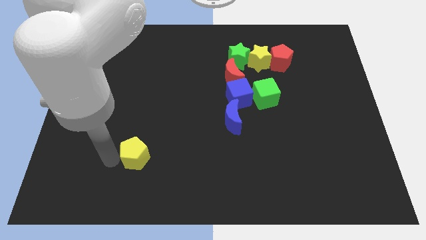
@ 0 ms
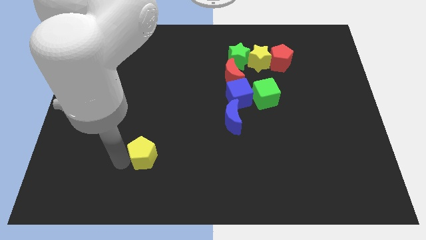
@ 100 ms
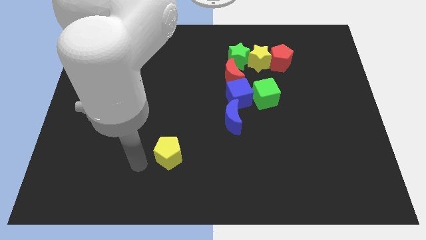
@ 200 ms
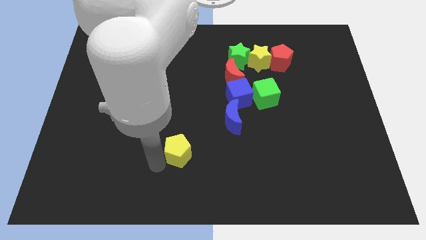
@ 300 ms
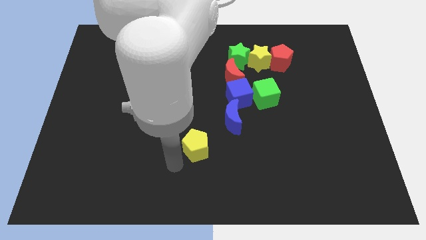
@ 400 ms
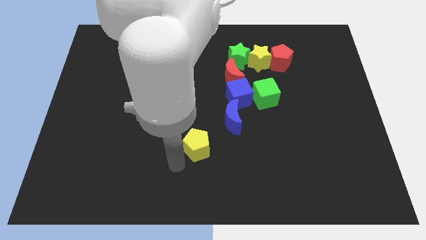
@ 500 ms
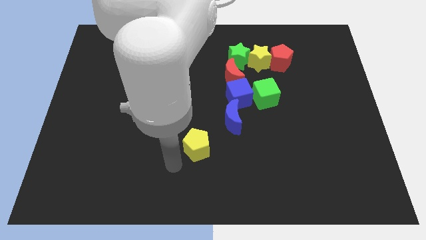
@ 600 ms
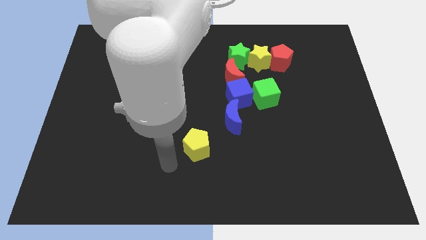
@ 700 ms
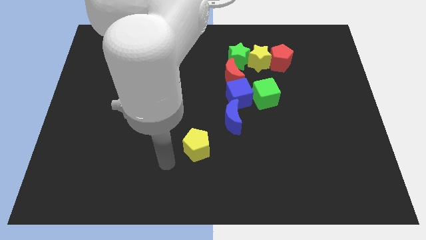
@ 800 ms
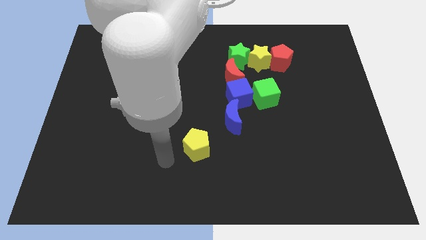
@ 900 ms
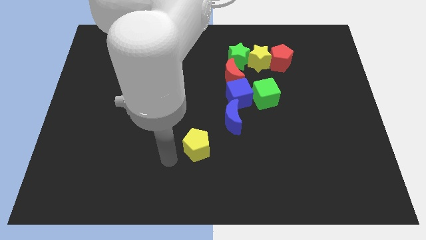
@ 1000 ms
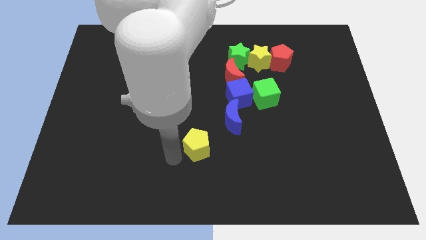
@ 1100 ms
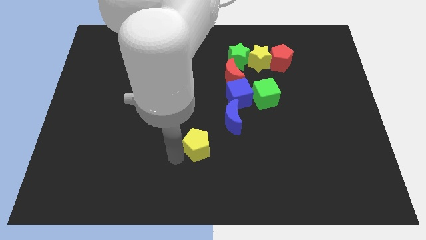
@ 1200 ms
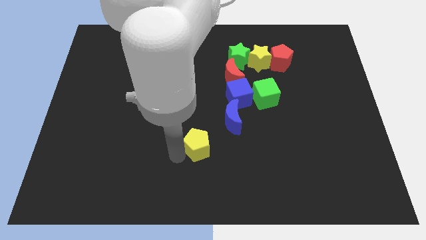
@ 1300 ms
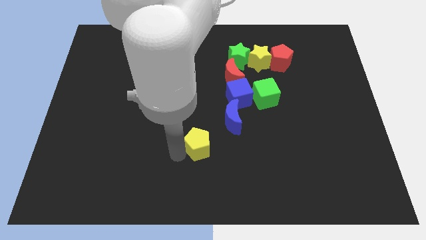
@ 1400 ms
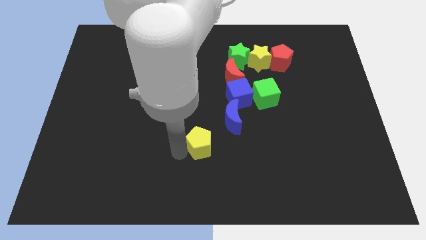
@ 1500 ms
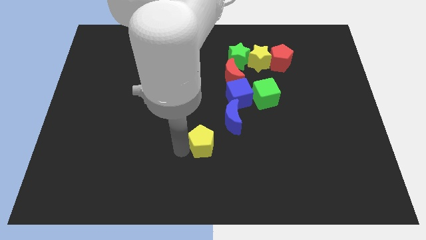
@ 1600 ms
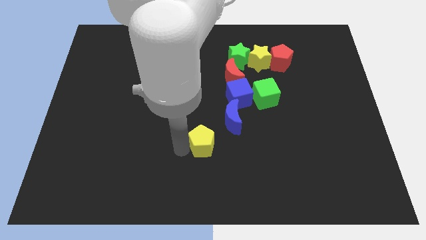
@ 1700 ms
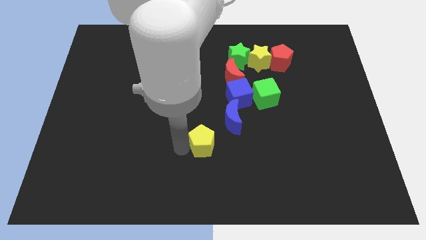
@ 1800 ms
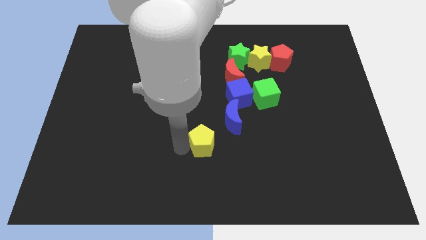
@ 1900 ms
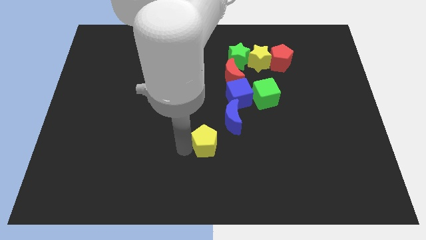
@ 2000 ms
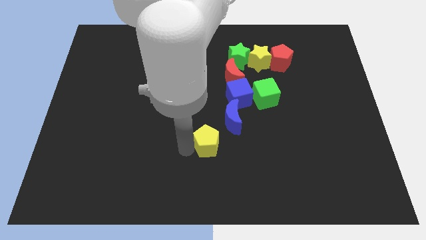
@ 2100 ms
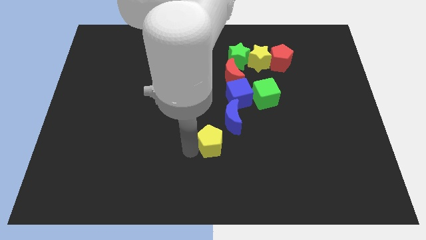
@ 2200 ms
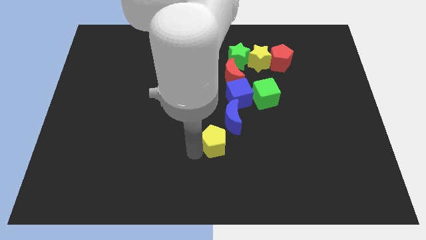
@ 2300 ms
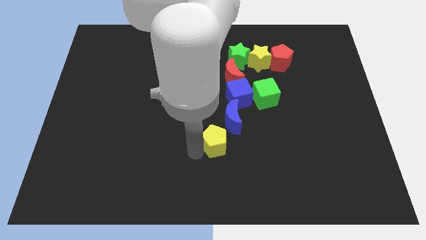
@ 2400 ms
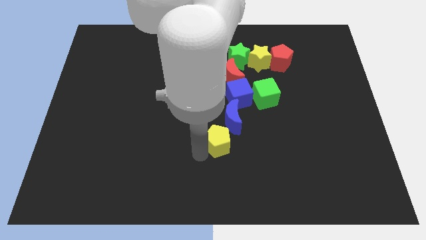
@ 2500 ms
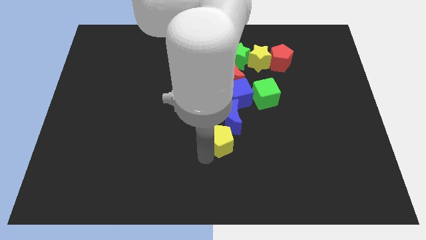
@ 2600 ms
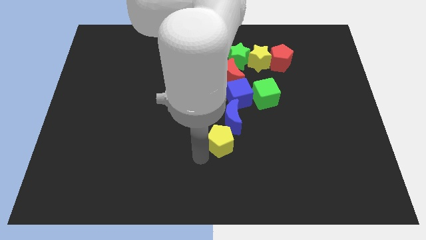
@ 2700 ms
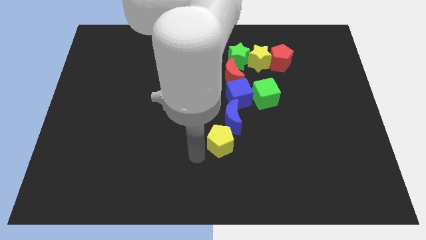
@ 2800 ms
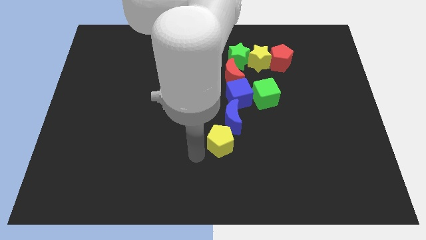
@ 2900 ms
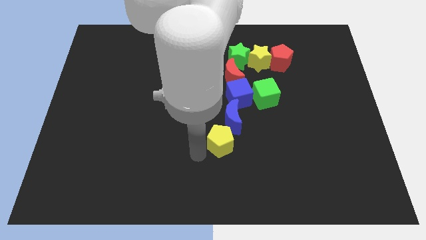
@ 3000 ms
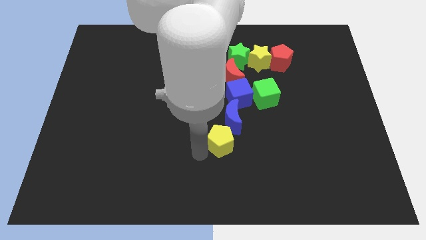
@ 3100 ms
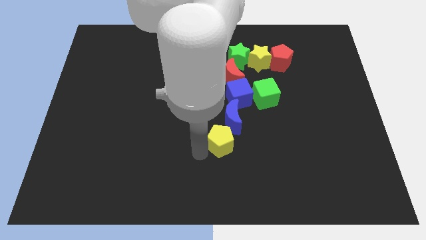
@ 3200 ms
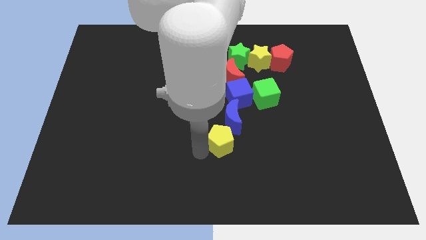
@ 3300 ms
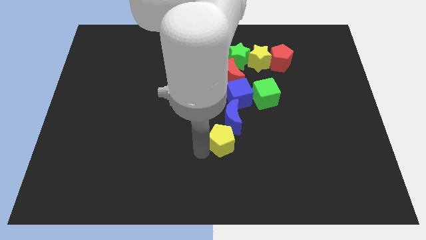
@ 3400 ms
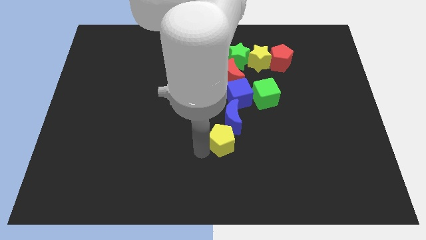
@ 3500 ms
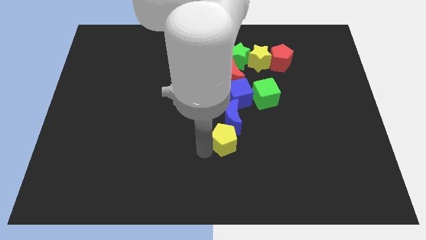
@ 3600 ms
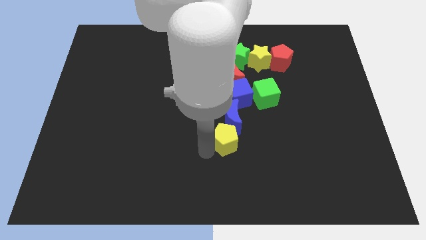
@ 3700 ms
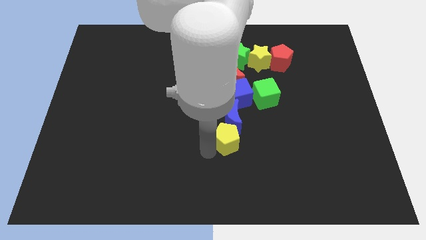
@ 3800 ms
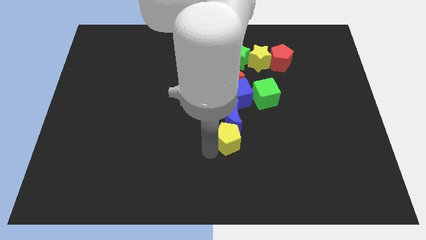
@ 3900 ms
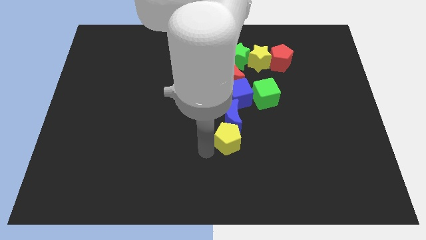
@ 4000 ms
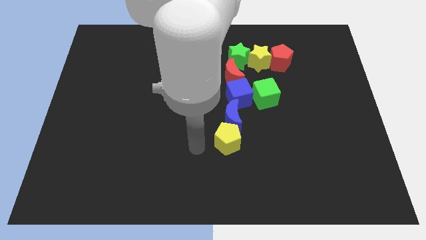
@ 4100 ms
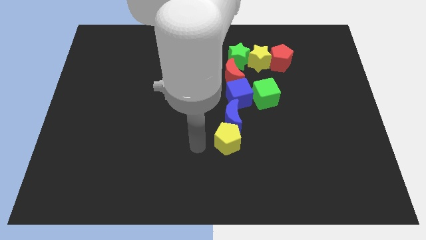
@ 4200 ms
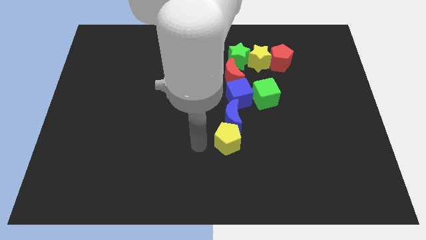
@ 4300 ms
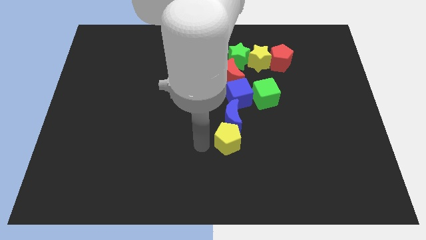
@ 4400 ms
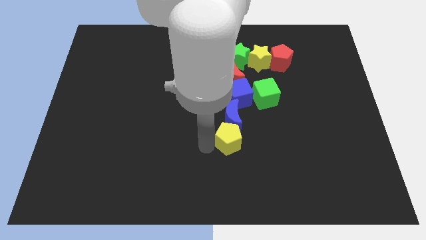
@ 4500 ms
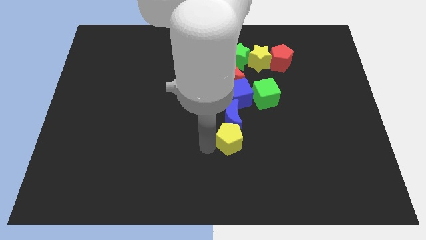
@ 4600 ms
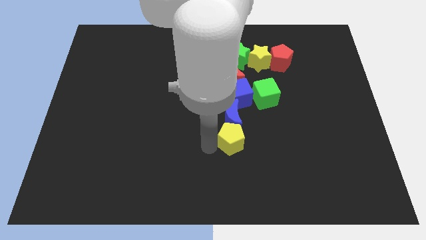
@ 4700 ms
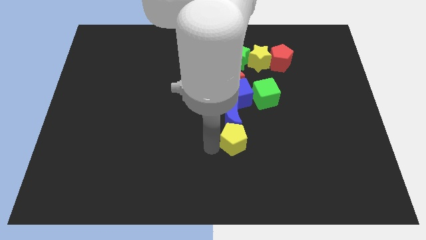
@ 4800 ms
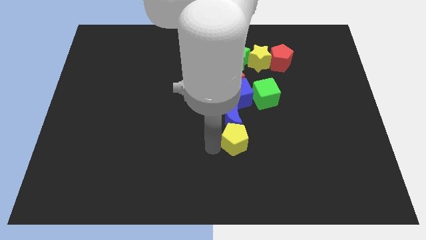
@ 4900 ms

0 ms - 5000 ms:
place the yellow pentagon below the blue crescent

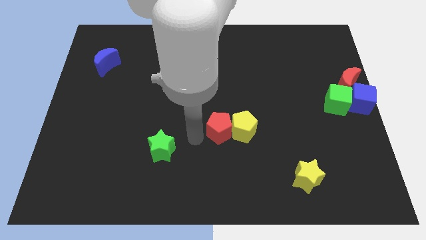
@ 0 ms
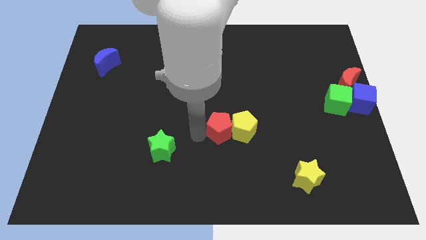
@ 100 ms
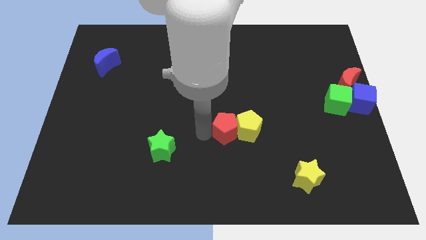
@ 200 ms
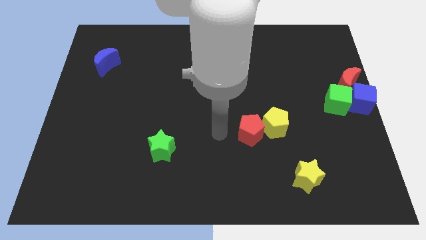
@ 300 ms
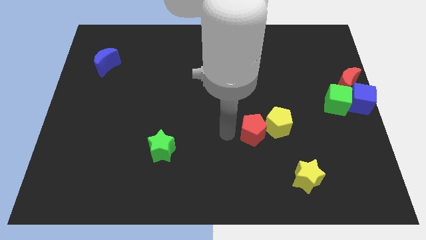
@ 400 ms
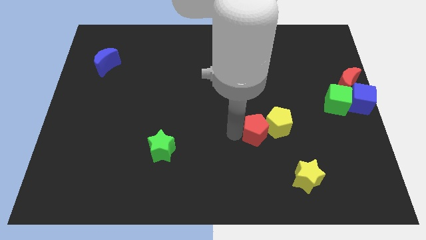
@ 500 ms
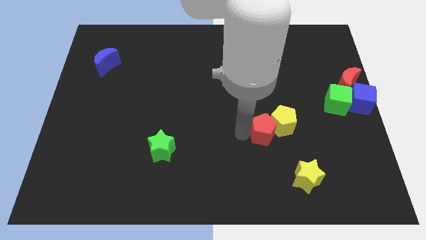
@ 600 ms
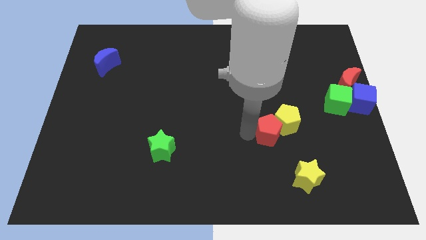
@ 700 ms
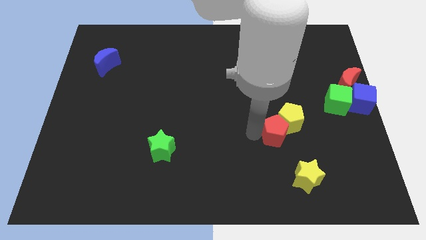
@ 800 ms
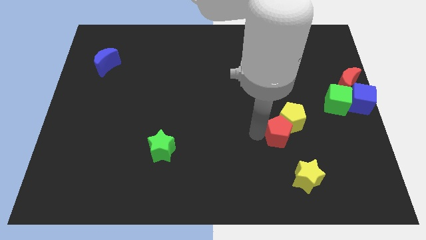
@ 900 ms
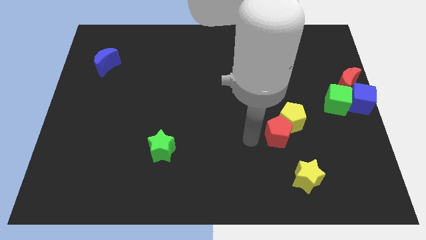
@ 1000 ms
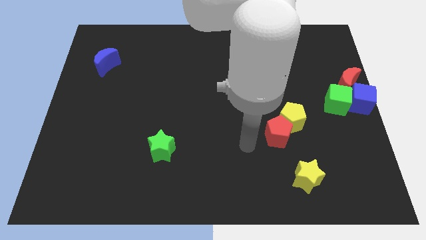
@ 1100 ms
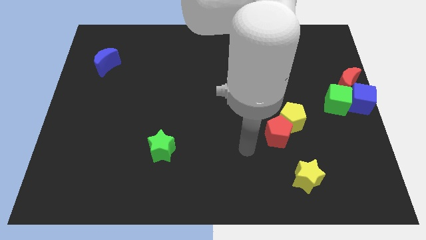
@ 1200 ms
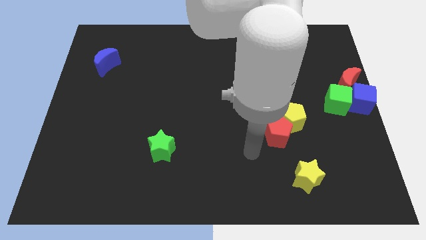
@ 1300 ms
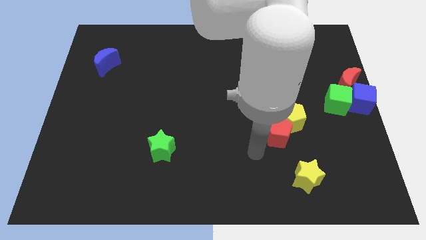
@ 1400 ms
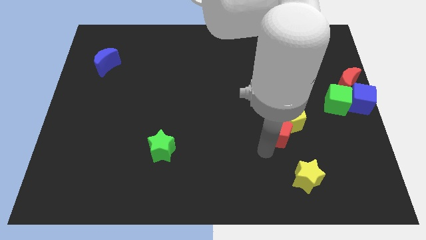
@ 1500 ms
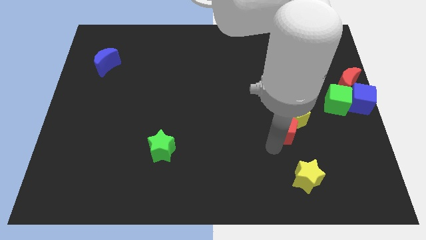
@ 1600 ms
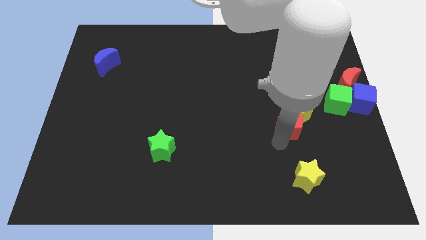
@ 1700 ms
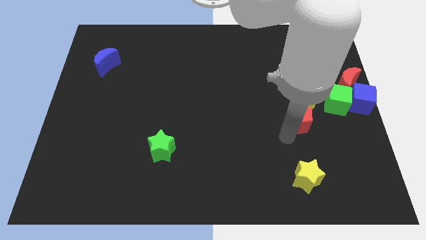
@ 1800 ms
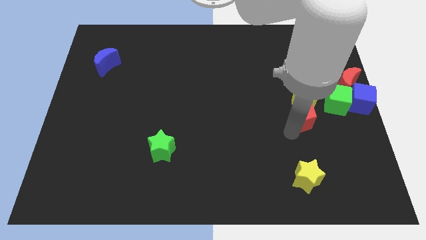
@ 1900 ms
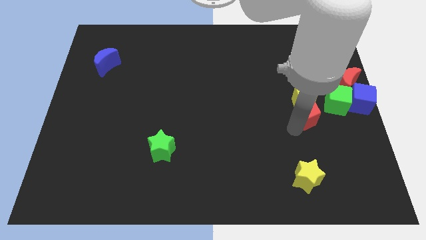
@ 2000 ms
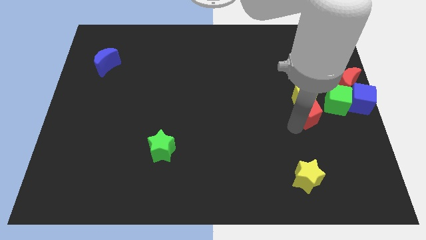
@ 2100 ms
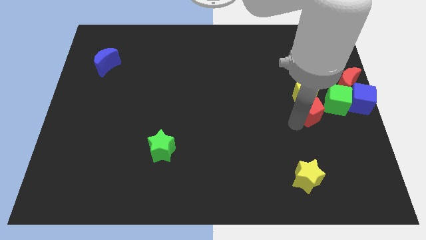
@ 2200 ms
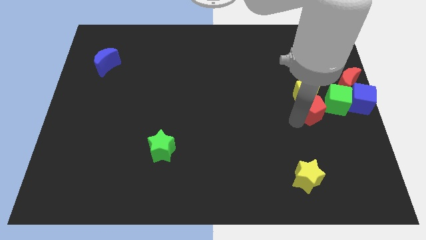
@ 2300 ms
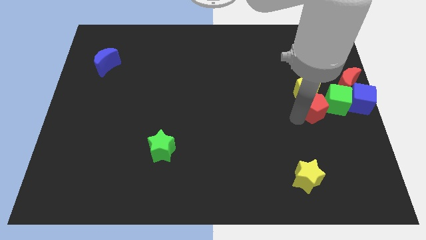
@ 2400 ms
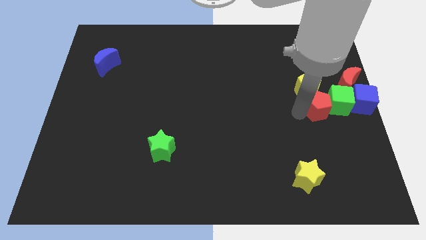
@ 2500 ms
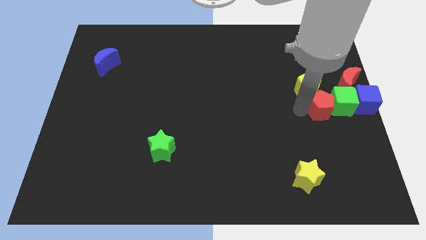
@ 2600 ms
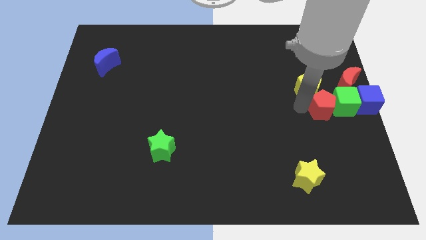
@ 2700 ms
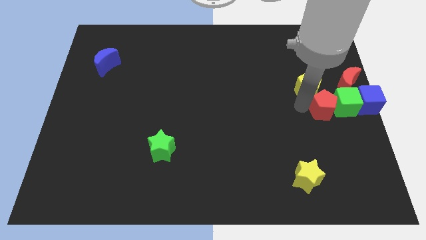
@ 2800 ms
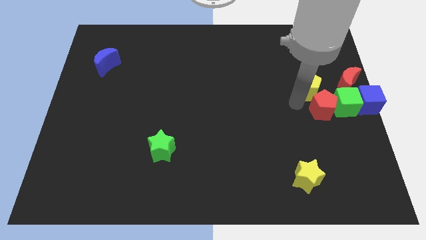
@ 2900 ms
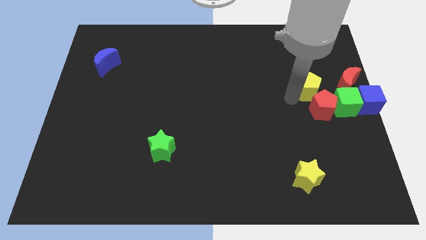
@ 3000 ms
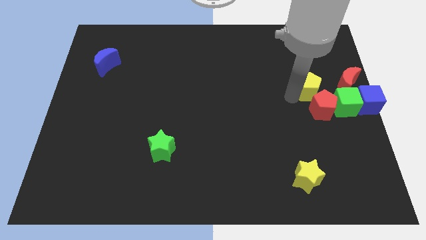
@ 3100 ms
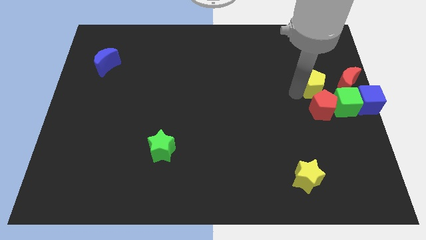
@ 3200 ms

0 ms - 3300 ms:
place red on the left side of the green cube

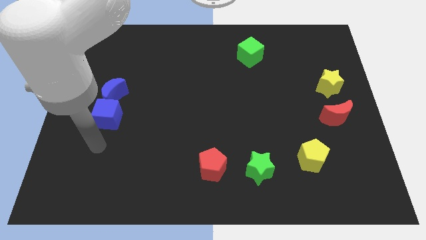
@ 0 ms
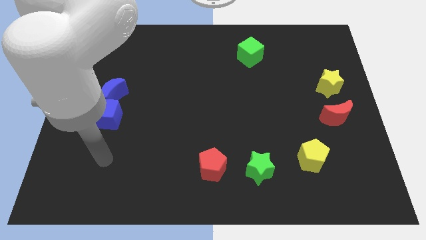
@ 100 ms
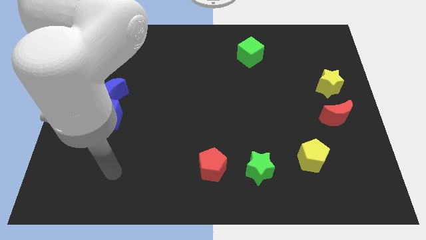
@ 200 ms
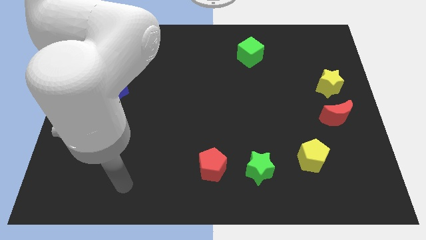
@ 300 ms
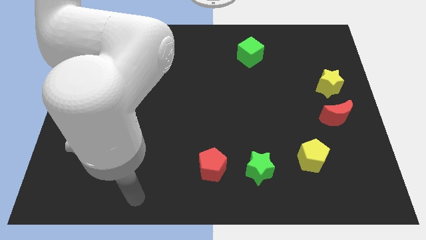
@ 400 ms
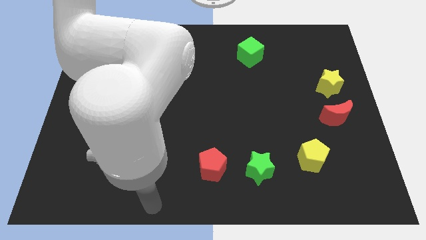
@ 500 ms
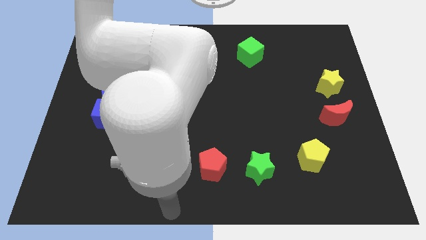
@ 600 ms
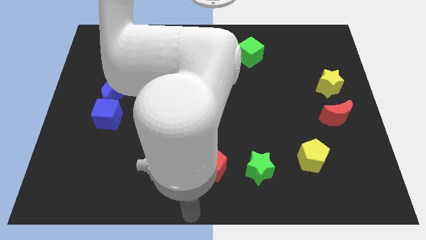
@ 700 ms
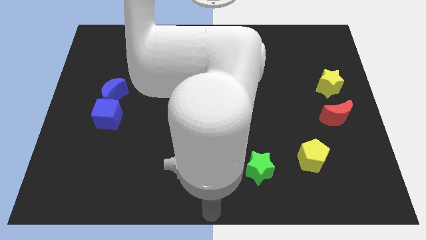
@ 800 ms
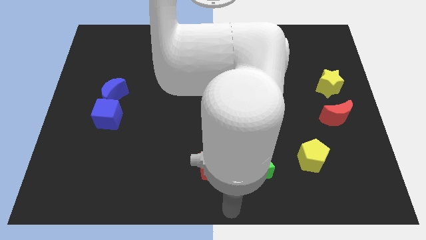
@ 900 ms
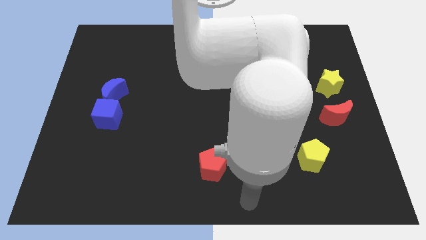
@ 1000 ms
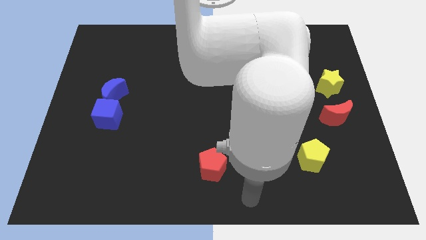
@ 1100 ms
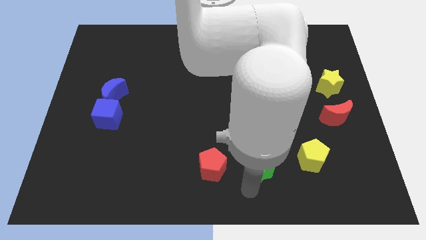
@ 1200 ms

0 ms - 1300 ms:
move your arm towards the green star
